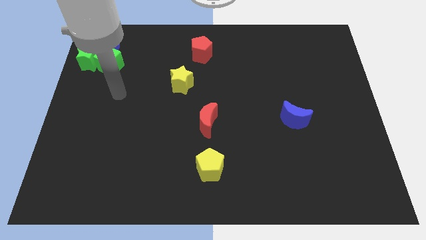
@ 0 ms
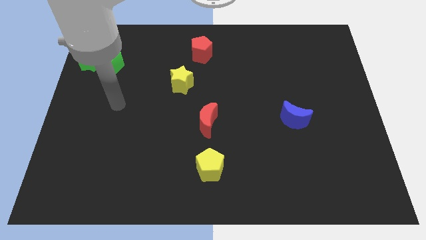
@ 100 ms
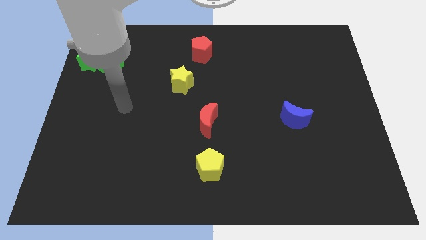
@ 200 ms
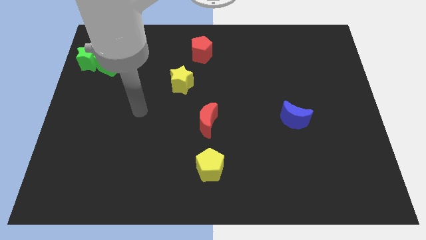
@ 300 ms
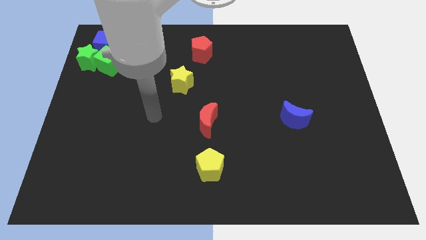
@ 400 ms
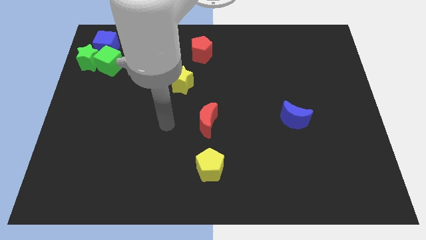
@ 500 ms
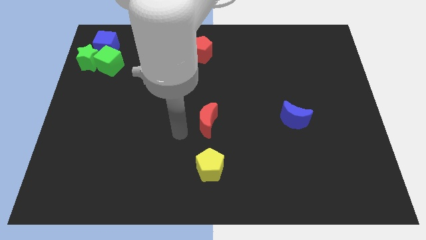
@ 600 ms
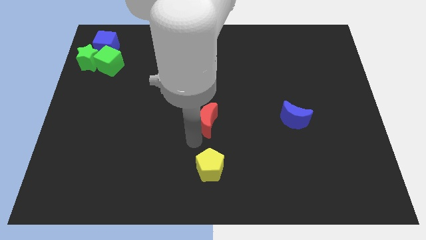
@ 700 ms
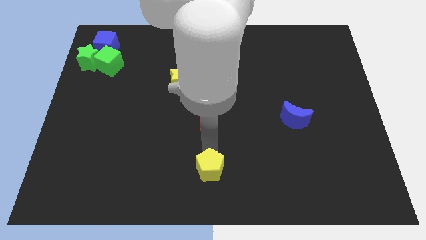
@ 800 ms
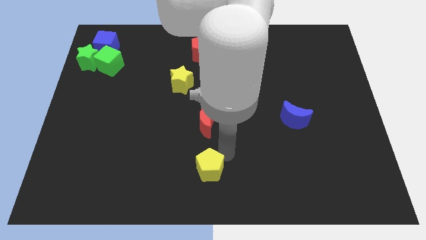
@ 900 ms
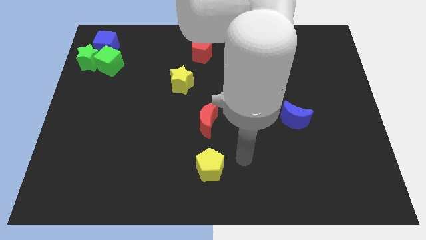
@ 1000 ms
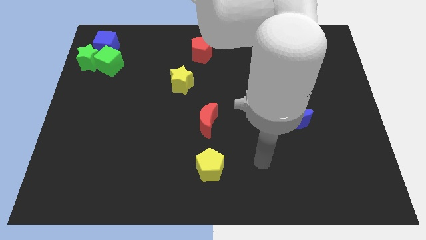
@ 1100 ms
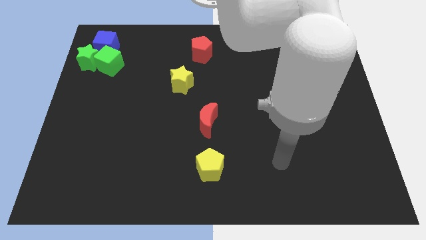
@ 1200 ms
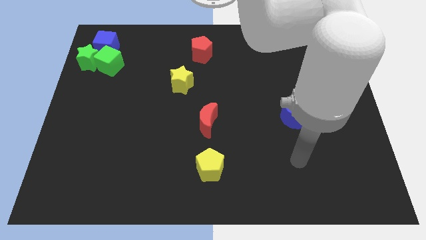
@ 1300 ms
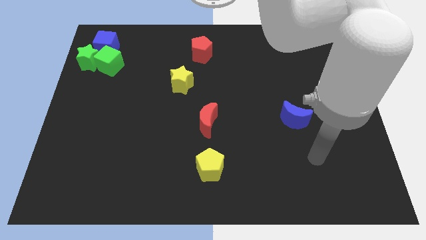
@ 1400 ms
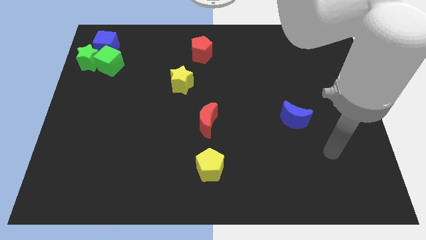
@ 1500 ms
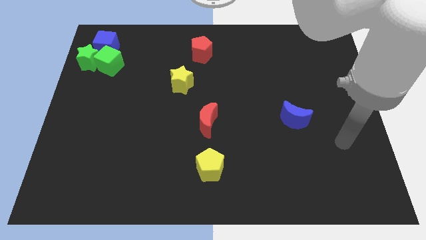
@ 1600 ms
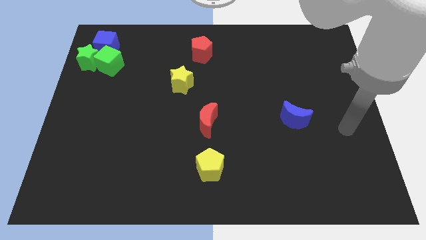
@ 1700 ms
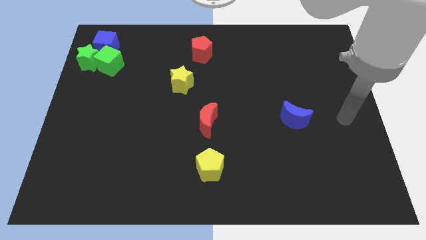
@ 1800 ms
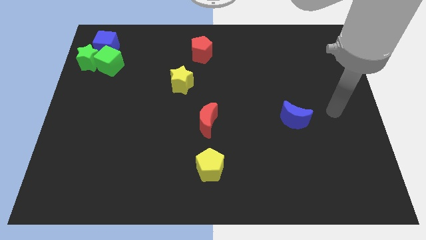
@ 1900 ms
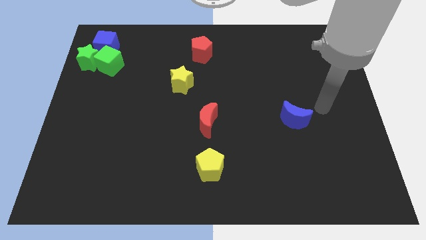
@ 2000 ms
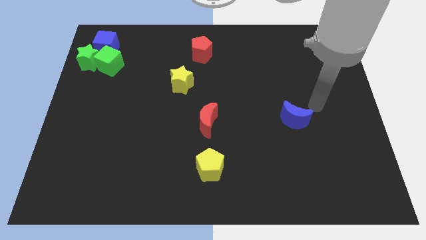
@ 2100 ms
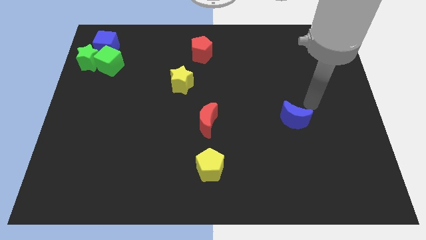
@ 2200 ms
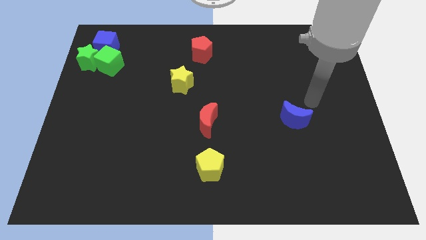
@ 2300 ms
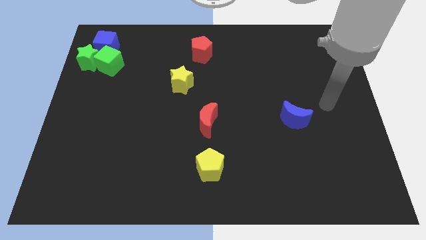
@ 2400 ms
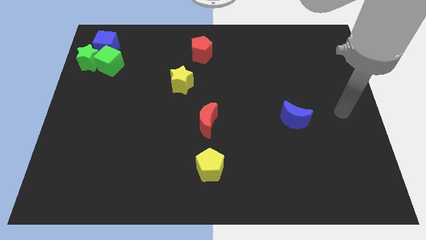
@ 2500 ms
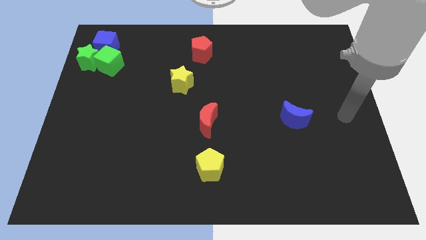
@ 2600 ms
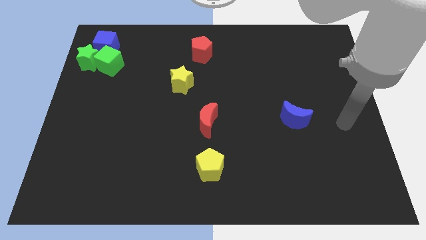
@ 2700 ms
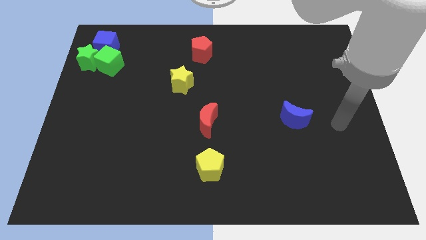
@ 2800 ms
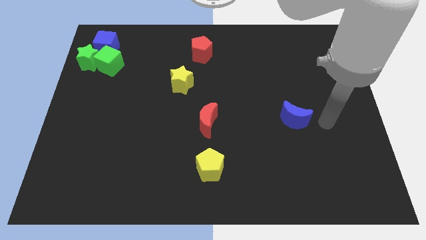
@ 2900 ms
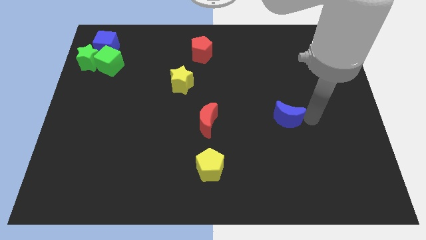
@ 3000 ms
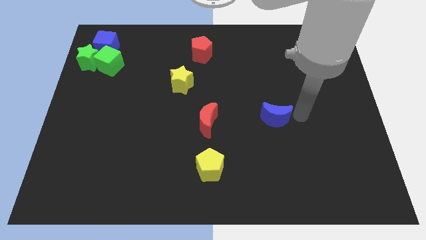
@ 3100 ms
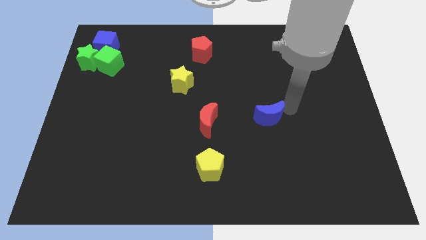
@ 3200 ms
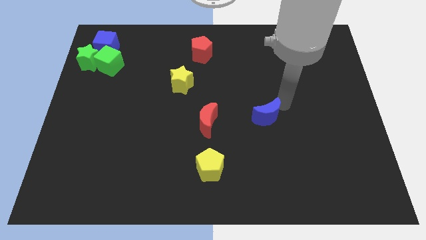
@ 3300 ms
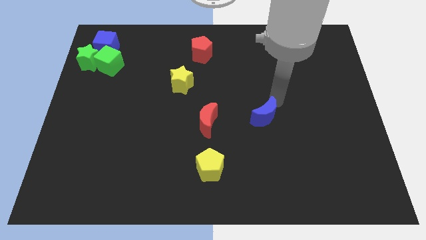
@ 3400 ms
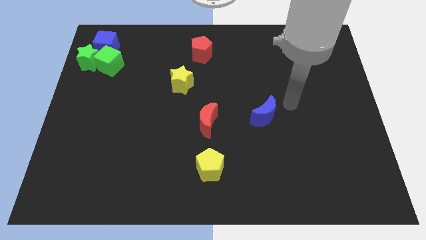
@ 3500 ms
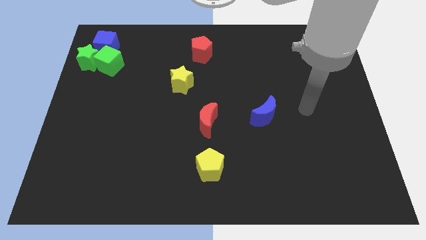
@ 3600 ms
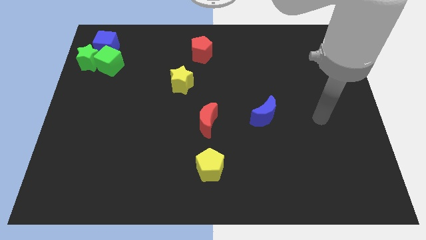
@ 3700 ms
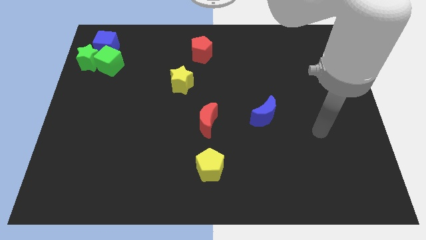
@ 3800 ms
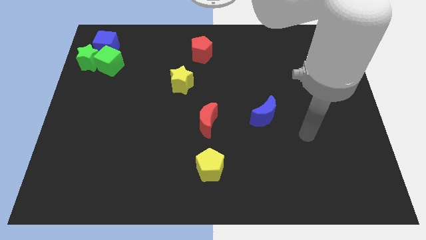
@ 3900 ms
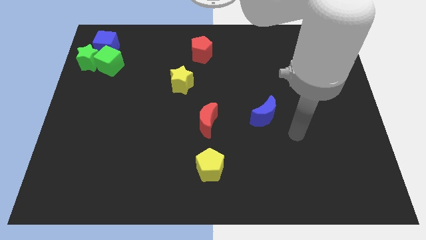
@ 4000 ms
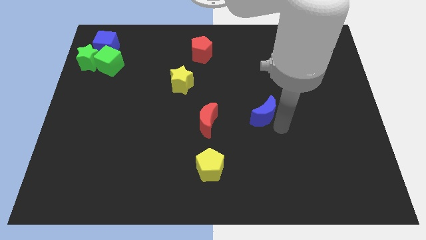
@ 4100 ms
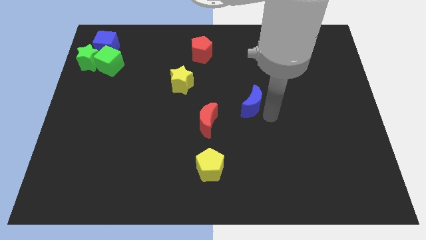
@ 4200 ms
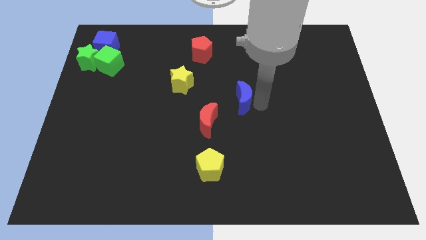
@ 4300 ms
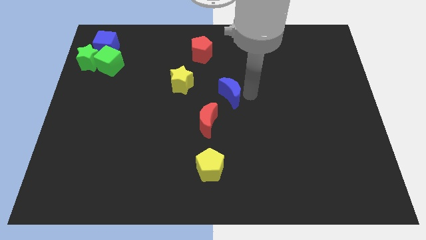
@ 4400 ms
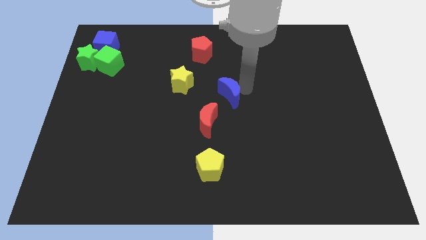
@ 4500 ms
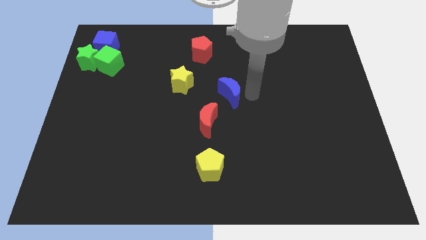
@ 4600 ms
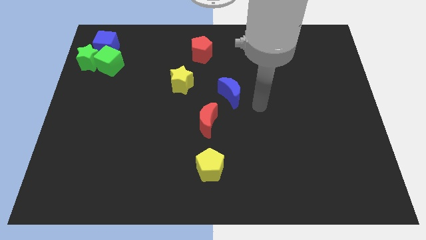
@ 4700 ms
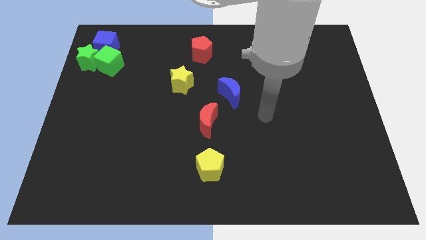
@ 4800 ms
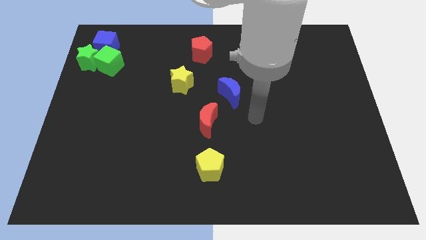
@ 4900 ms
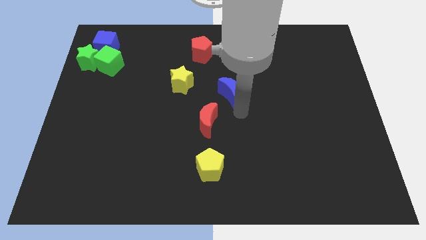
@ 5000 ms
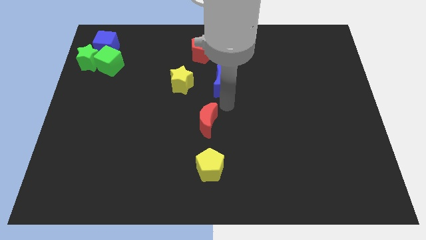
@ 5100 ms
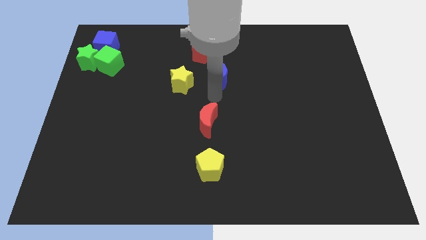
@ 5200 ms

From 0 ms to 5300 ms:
move the blue crescent above the red crescent

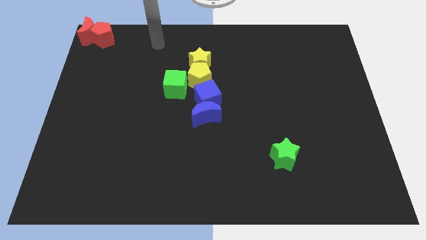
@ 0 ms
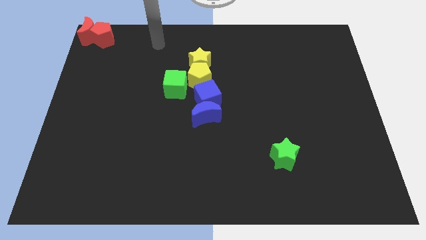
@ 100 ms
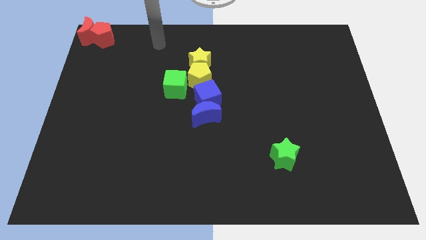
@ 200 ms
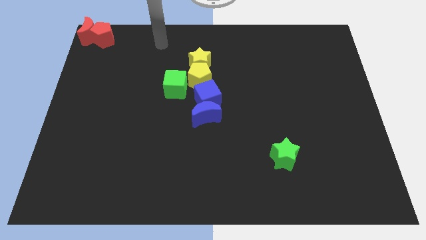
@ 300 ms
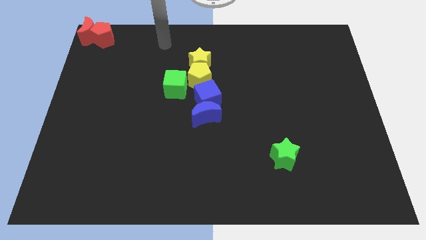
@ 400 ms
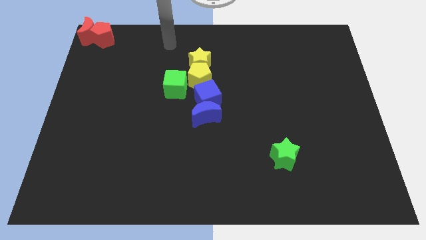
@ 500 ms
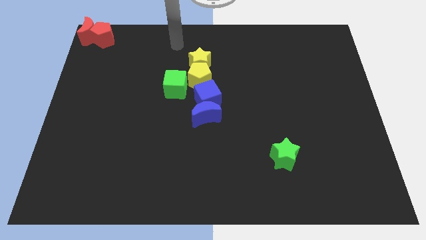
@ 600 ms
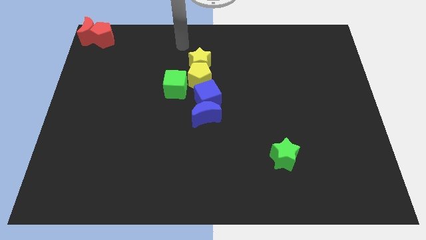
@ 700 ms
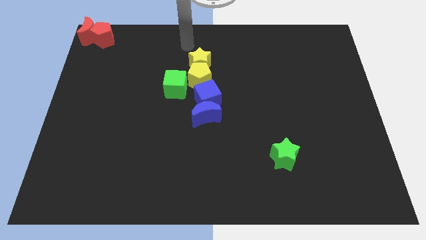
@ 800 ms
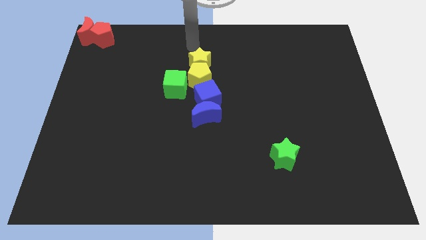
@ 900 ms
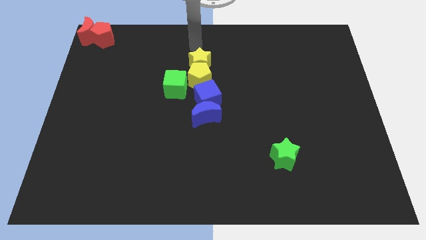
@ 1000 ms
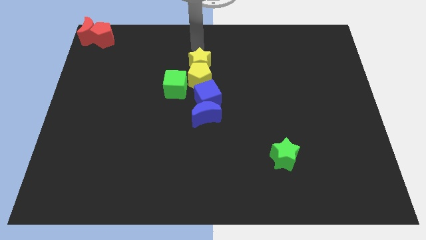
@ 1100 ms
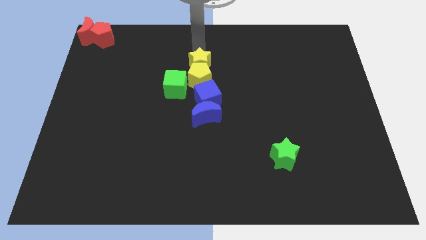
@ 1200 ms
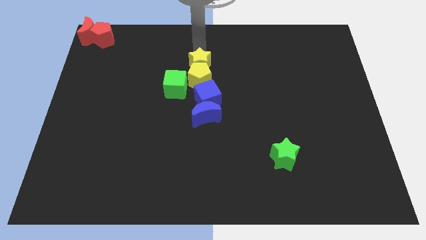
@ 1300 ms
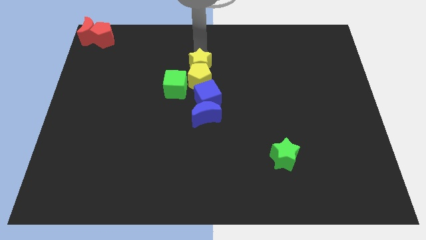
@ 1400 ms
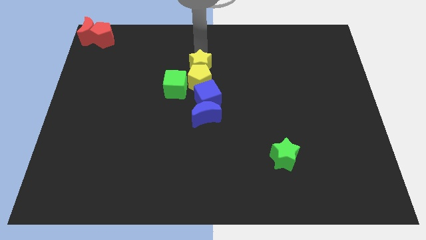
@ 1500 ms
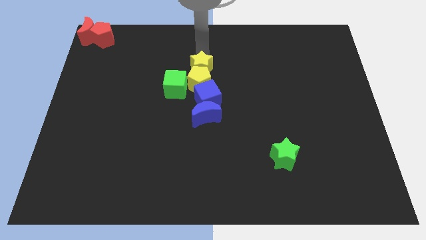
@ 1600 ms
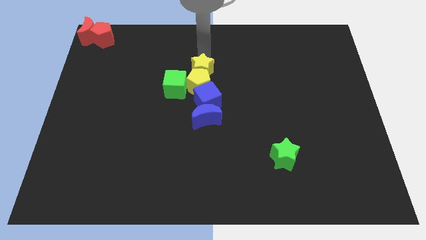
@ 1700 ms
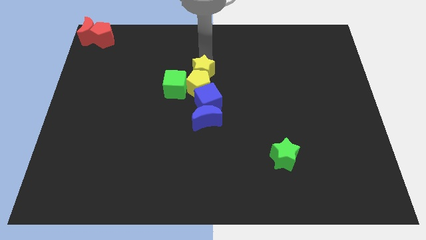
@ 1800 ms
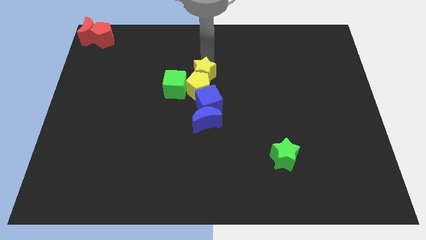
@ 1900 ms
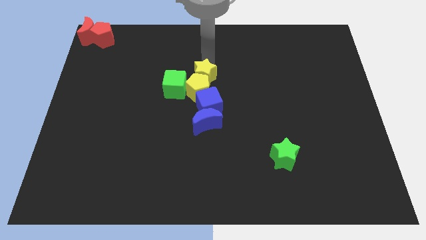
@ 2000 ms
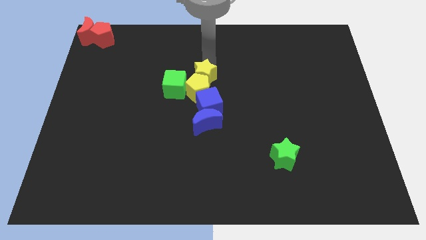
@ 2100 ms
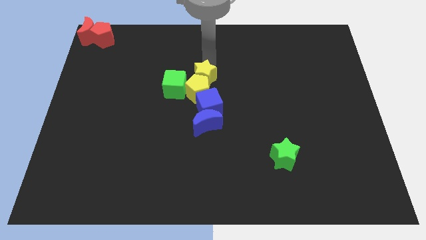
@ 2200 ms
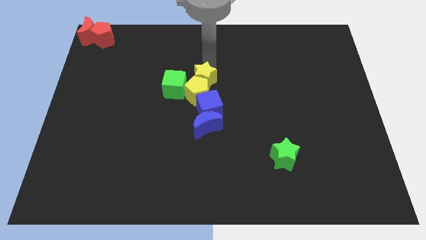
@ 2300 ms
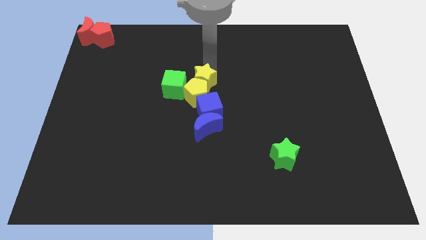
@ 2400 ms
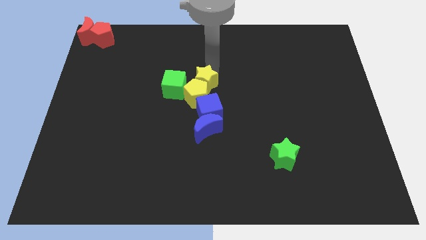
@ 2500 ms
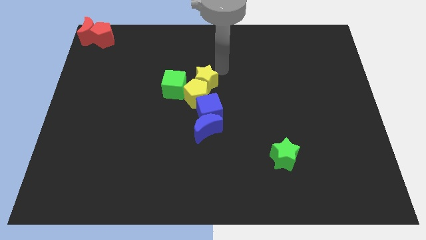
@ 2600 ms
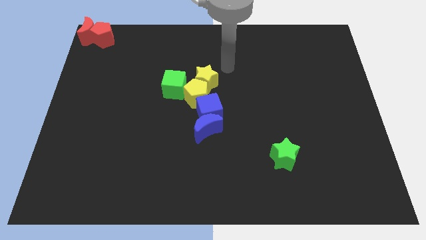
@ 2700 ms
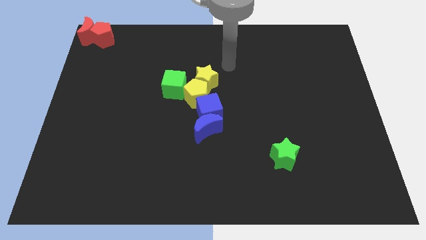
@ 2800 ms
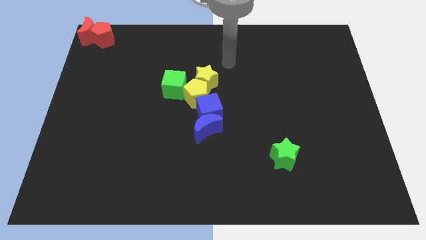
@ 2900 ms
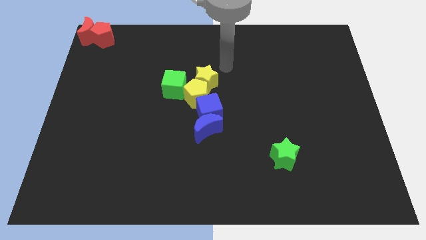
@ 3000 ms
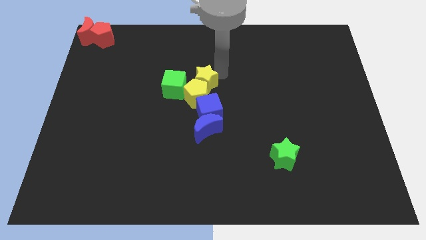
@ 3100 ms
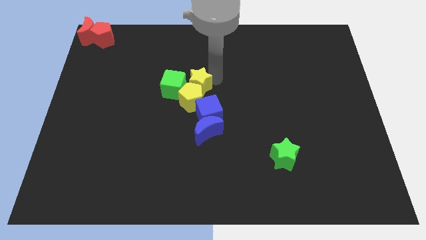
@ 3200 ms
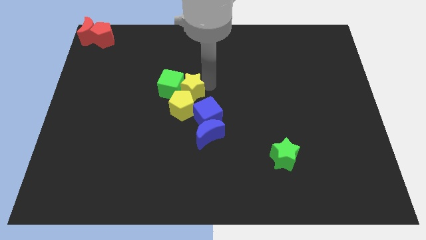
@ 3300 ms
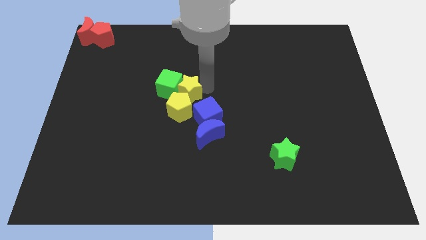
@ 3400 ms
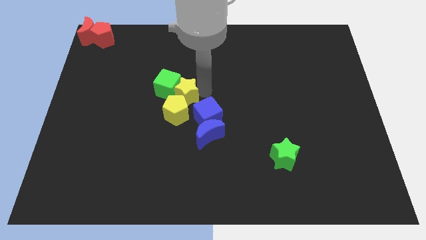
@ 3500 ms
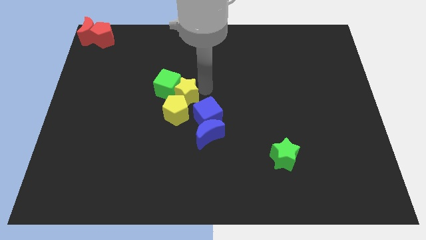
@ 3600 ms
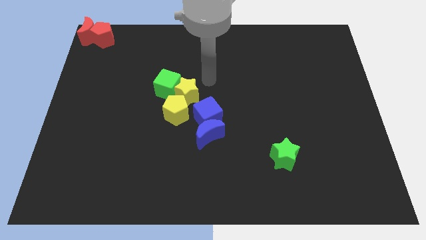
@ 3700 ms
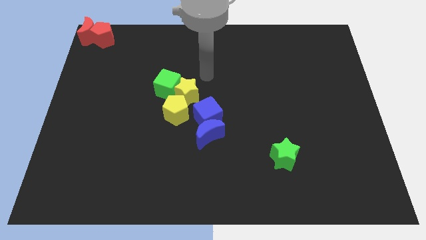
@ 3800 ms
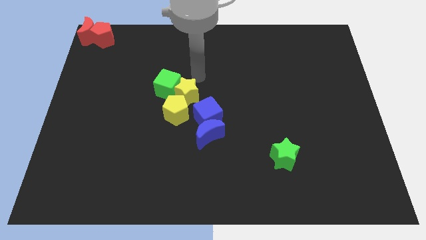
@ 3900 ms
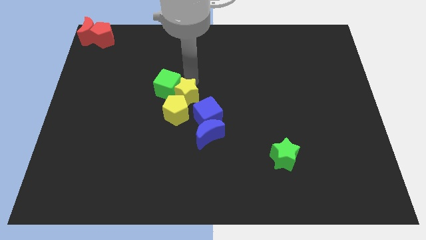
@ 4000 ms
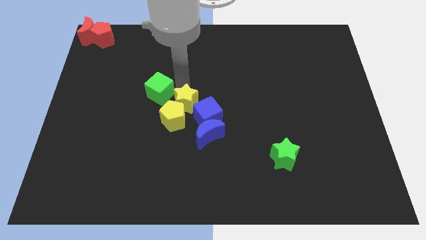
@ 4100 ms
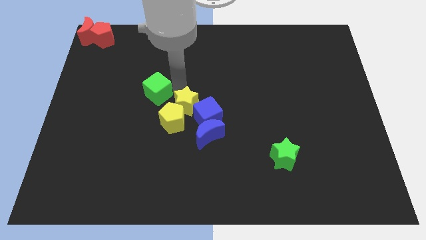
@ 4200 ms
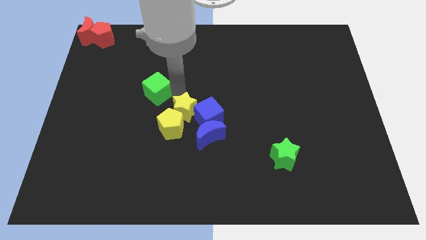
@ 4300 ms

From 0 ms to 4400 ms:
push yellow blocks slightly towards down
